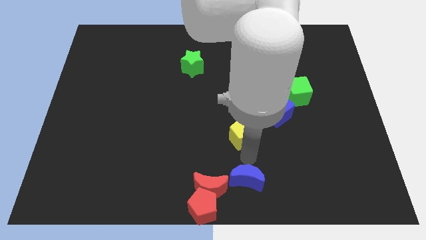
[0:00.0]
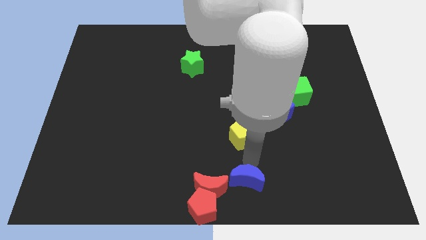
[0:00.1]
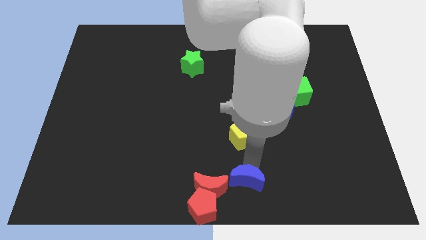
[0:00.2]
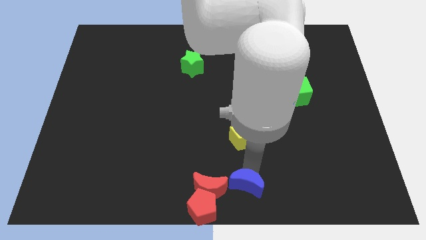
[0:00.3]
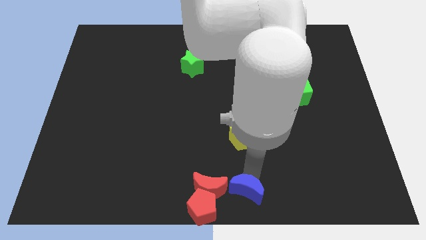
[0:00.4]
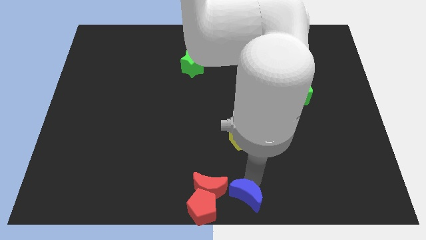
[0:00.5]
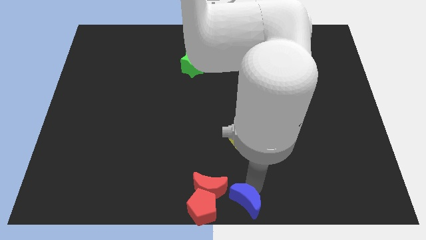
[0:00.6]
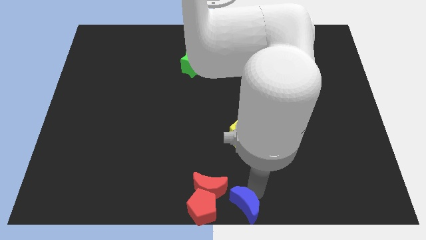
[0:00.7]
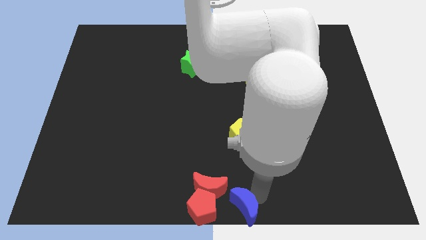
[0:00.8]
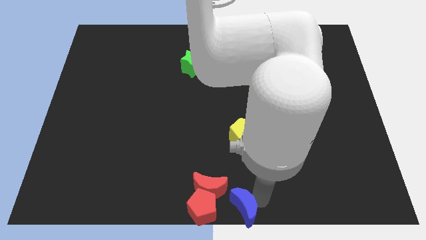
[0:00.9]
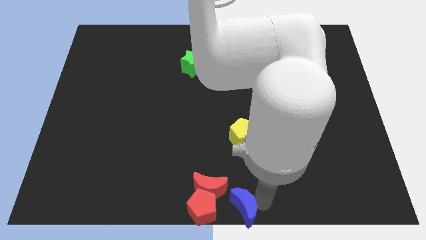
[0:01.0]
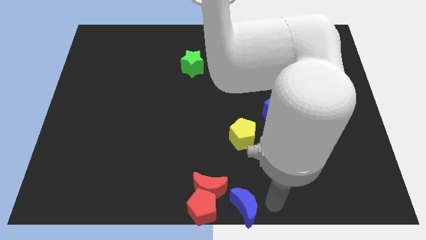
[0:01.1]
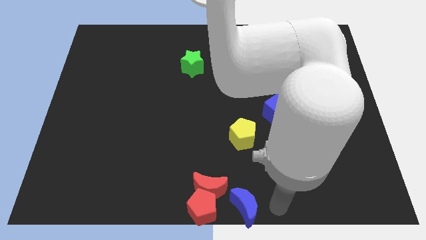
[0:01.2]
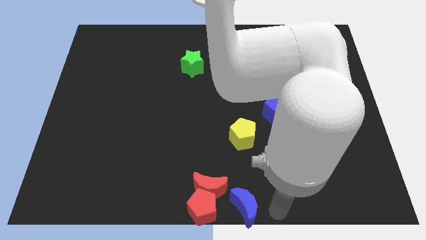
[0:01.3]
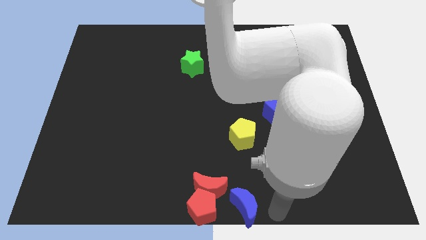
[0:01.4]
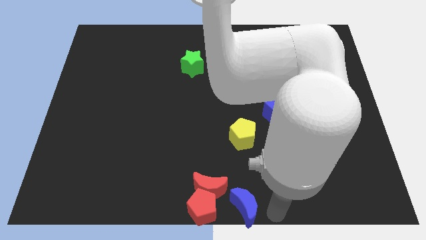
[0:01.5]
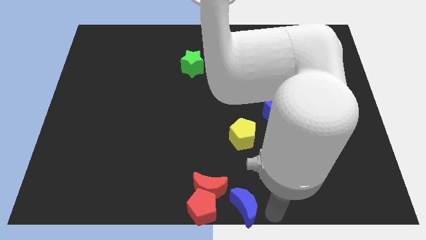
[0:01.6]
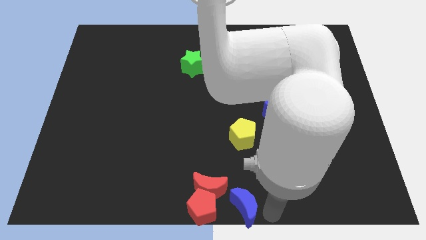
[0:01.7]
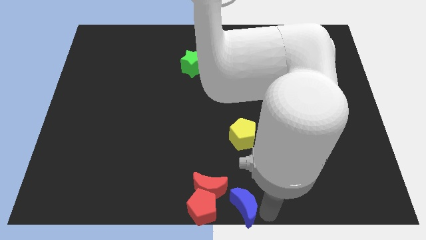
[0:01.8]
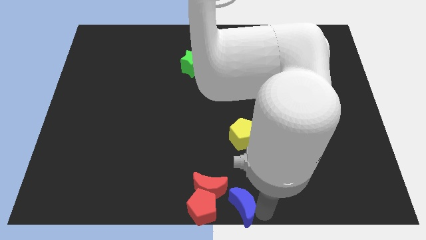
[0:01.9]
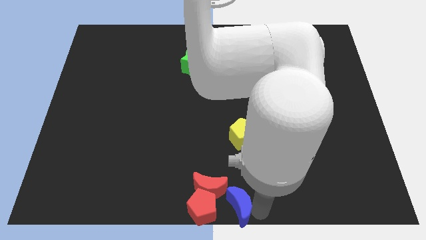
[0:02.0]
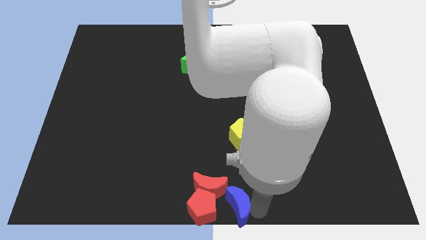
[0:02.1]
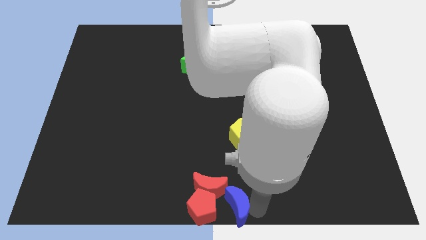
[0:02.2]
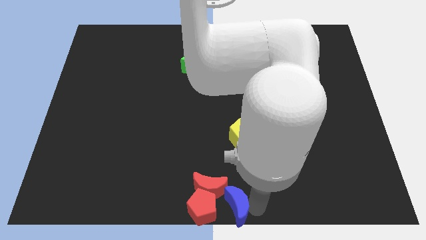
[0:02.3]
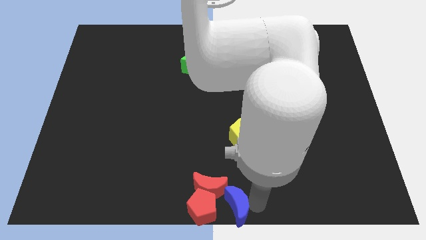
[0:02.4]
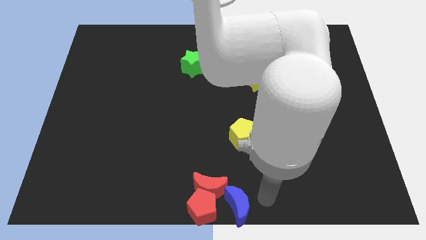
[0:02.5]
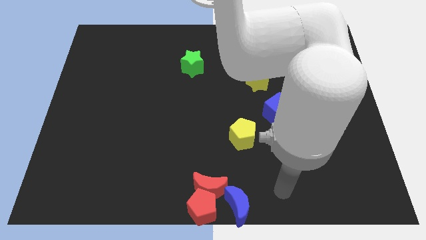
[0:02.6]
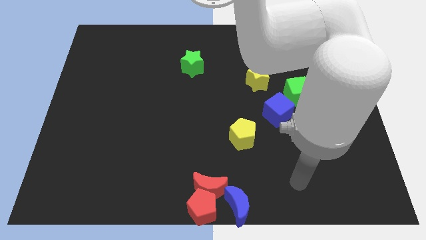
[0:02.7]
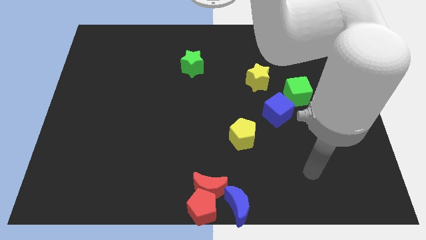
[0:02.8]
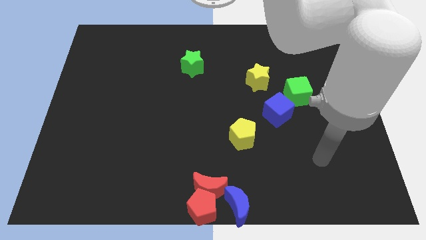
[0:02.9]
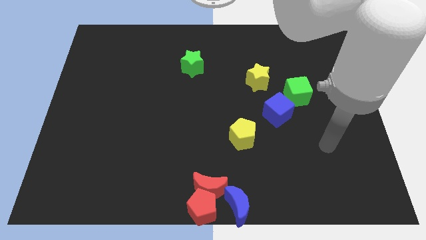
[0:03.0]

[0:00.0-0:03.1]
put the blue crescent to the right of the red pentagon

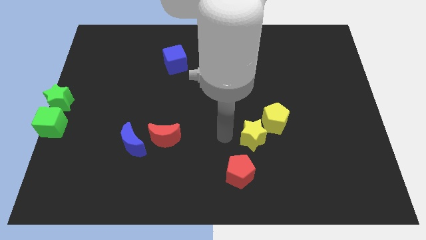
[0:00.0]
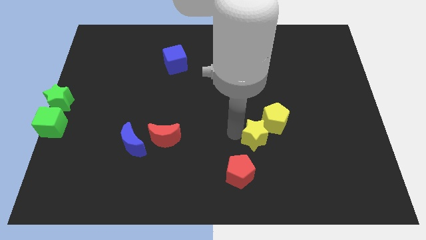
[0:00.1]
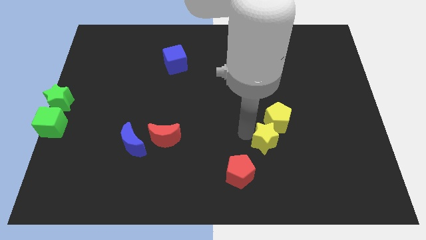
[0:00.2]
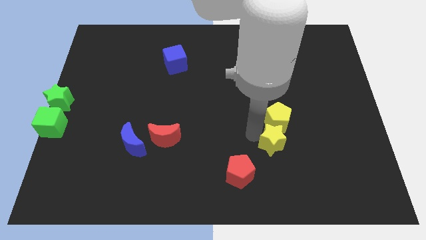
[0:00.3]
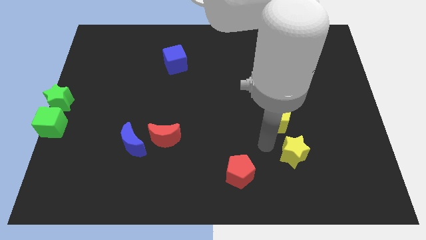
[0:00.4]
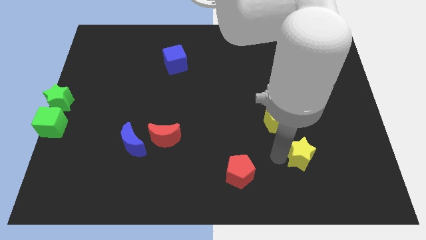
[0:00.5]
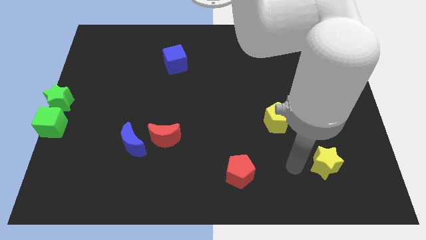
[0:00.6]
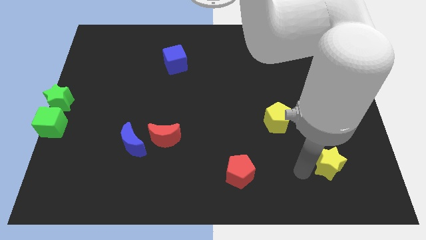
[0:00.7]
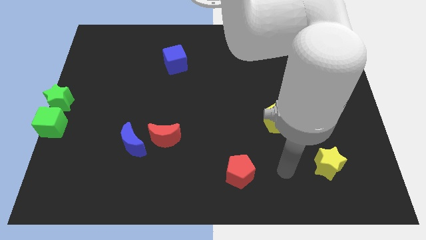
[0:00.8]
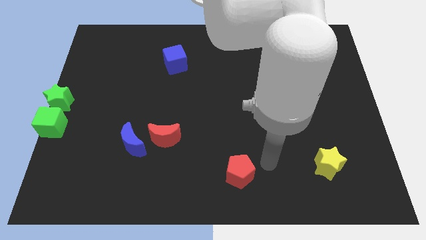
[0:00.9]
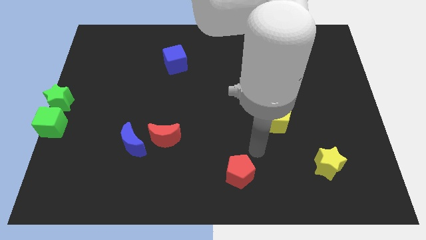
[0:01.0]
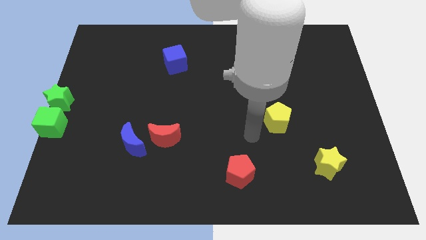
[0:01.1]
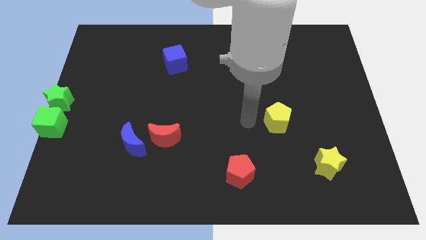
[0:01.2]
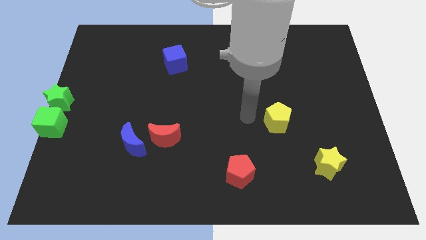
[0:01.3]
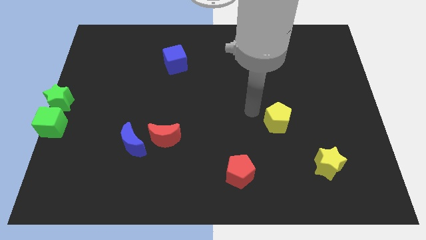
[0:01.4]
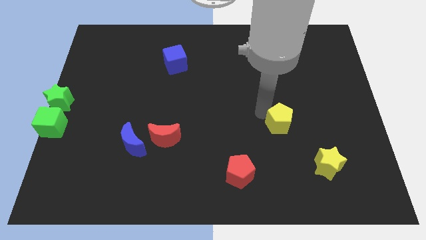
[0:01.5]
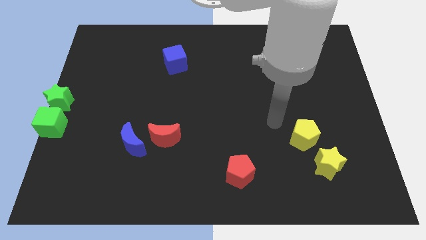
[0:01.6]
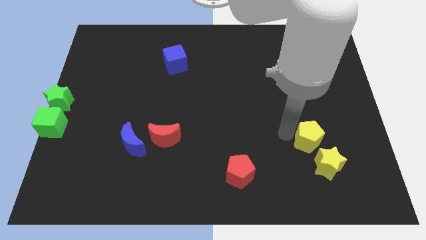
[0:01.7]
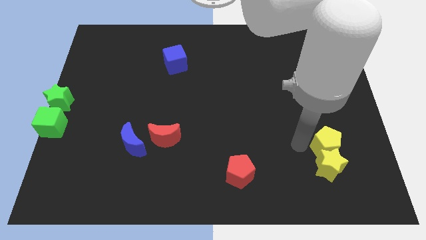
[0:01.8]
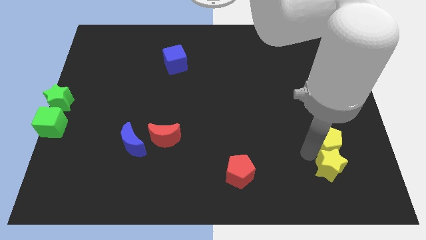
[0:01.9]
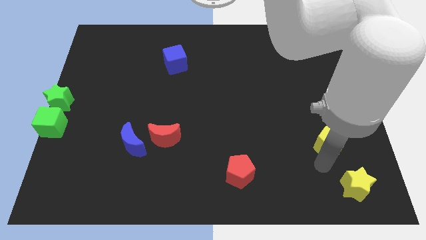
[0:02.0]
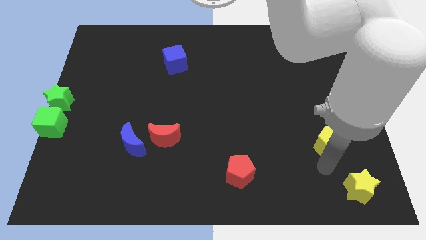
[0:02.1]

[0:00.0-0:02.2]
push the yellow star towards the bottom right

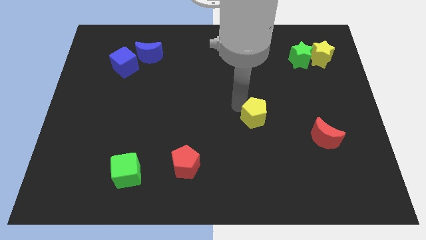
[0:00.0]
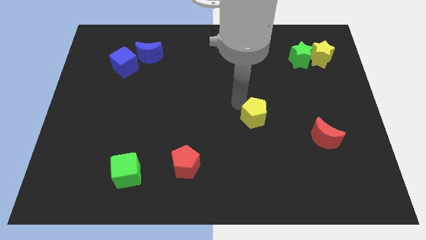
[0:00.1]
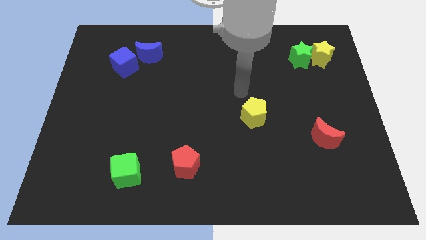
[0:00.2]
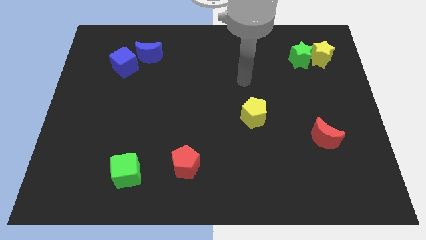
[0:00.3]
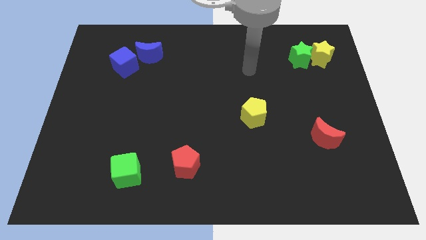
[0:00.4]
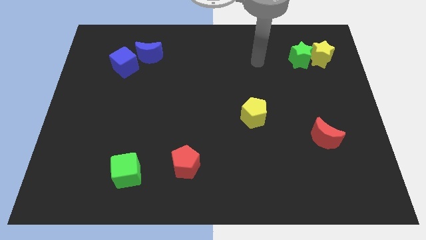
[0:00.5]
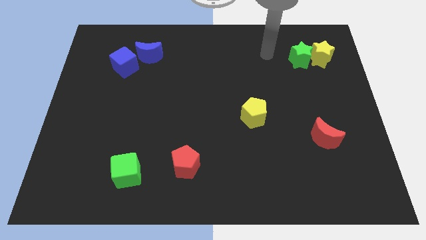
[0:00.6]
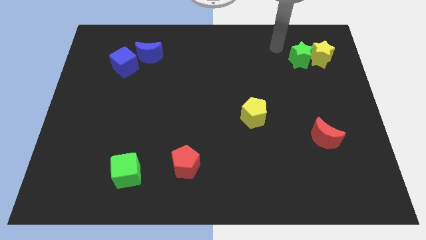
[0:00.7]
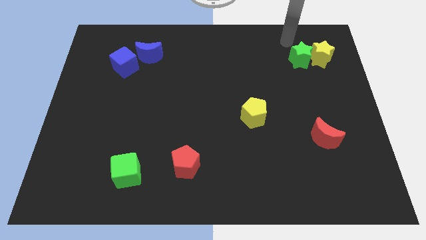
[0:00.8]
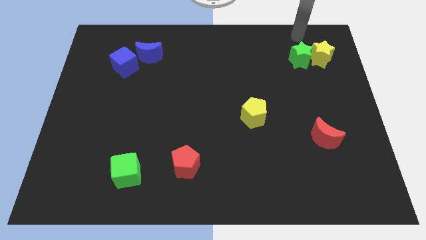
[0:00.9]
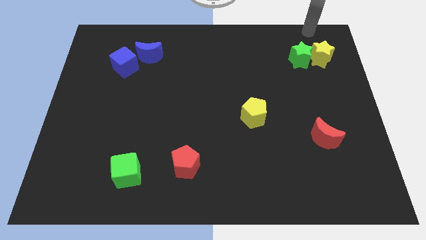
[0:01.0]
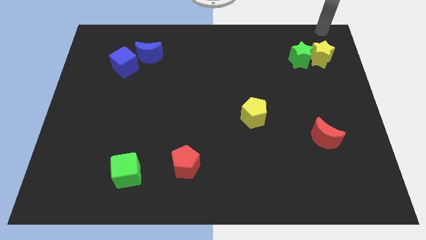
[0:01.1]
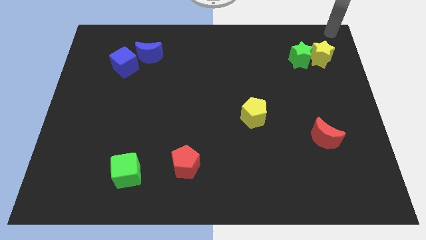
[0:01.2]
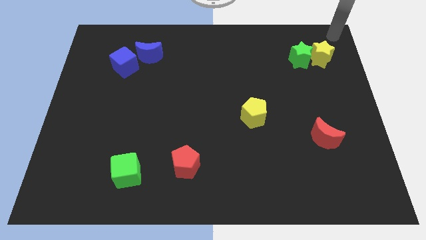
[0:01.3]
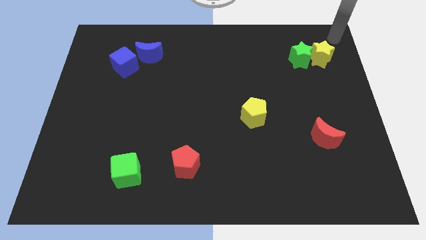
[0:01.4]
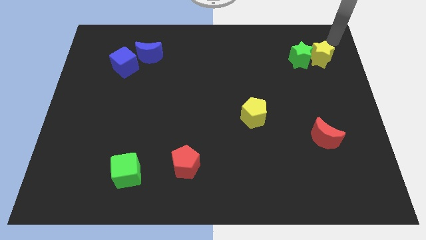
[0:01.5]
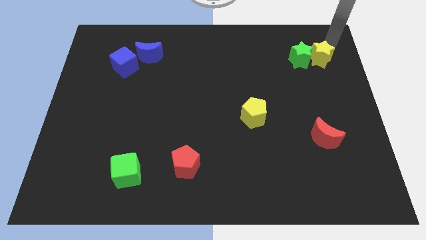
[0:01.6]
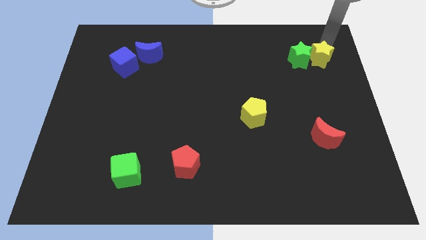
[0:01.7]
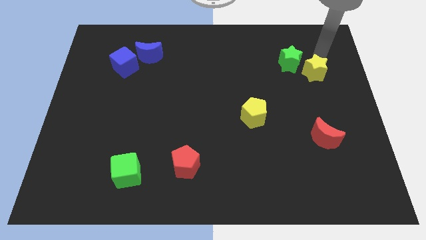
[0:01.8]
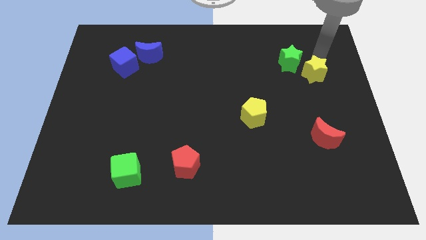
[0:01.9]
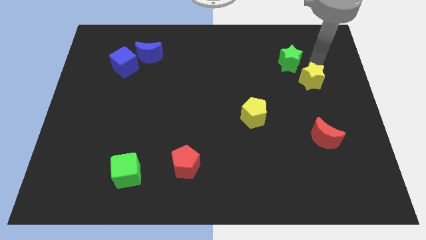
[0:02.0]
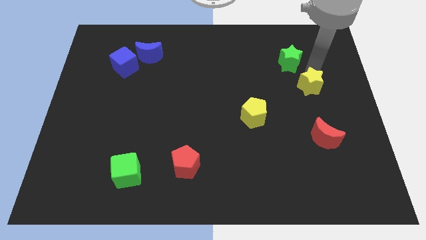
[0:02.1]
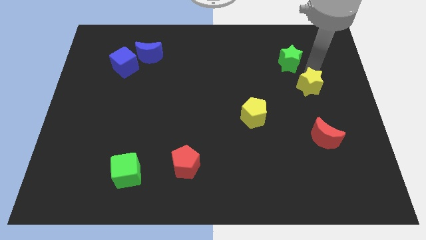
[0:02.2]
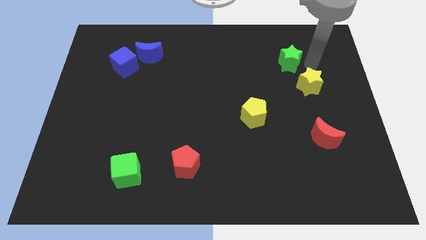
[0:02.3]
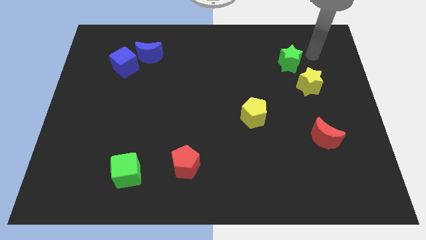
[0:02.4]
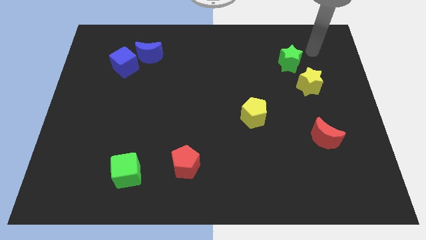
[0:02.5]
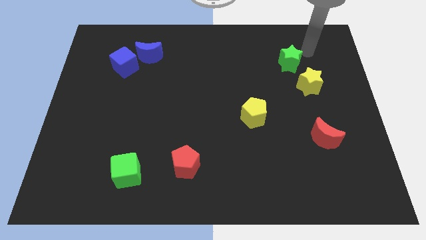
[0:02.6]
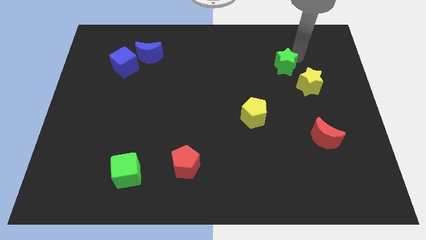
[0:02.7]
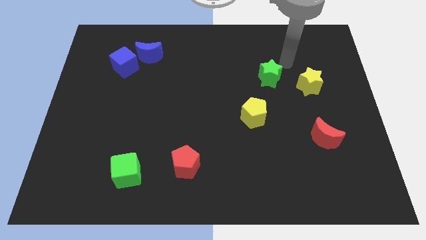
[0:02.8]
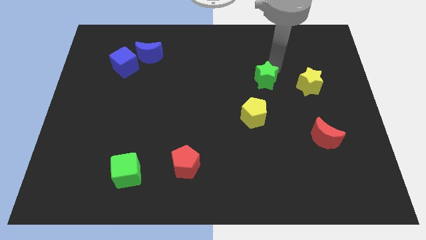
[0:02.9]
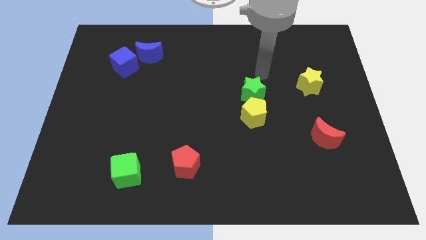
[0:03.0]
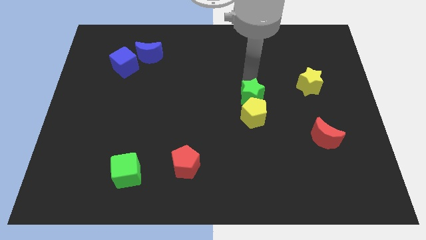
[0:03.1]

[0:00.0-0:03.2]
move the green star above the yellow pentagon

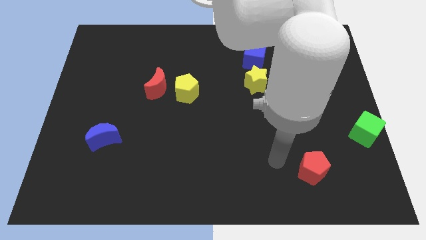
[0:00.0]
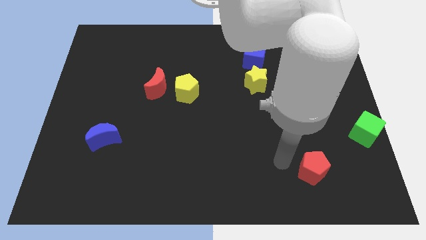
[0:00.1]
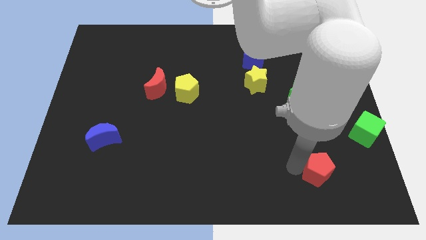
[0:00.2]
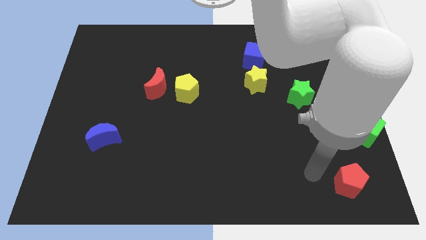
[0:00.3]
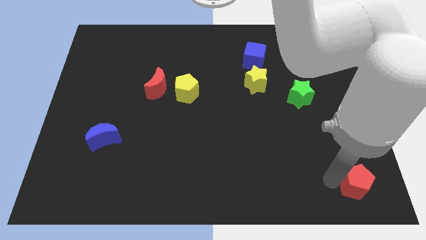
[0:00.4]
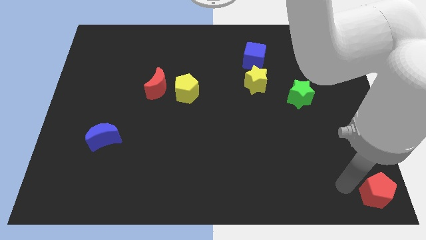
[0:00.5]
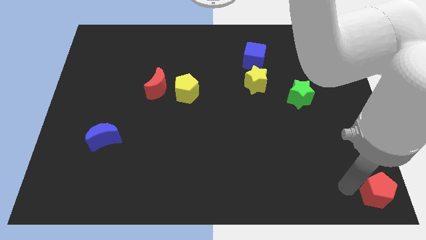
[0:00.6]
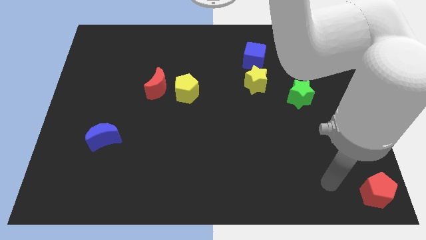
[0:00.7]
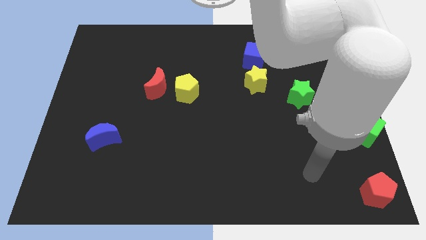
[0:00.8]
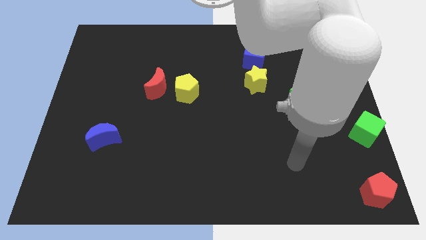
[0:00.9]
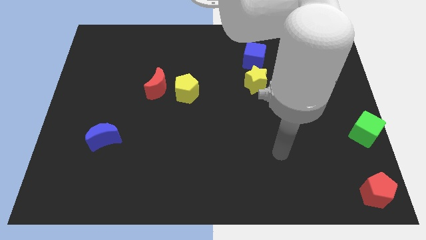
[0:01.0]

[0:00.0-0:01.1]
push red pentagon to the bottom right corner of the board
